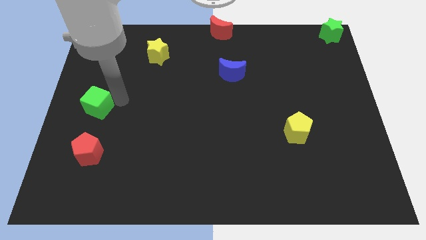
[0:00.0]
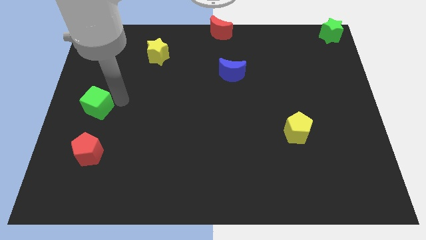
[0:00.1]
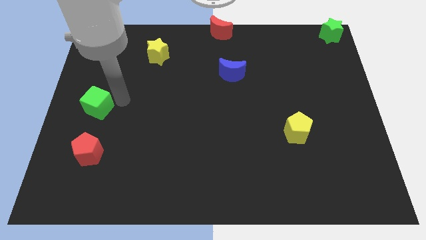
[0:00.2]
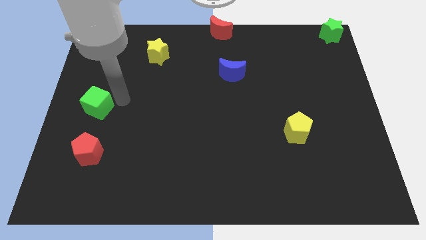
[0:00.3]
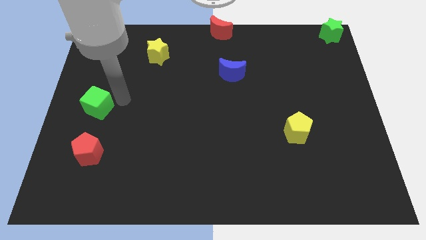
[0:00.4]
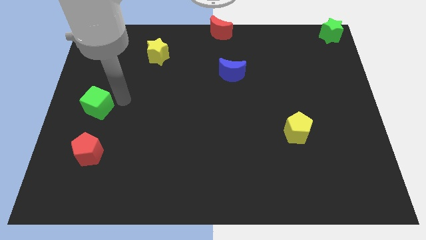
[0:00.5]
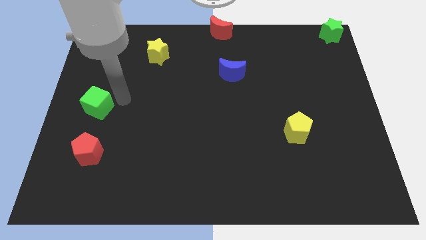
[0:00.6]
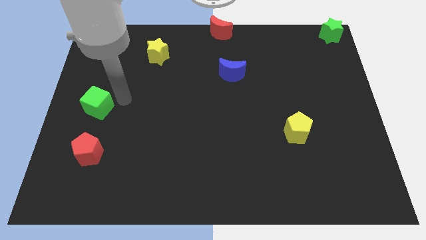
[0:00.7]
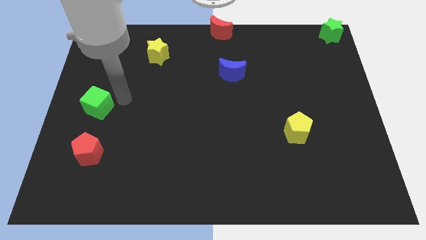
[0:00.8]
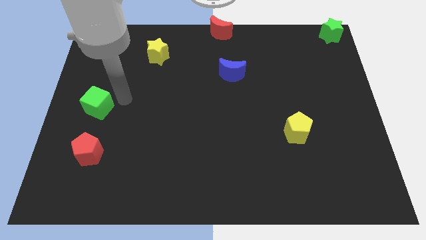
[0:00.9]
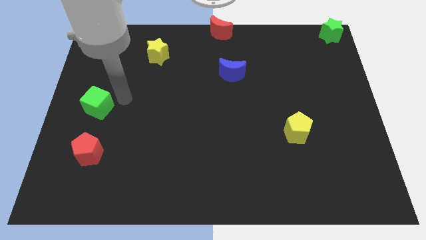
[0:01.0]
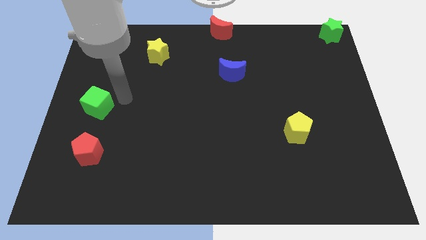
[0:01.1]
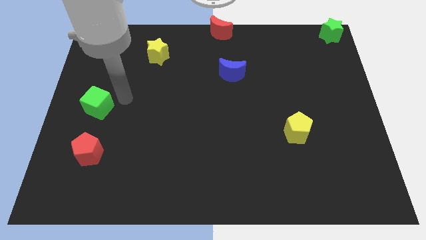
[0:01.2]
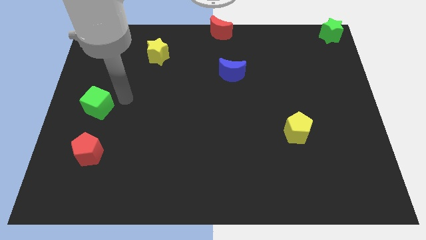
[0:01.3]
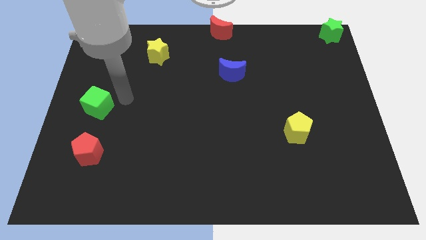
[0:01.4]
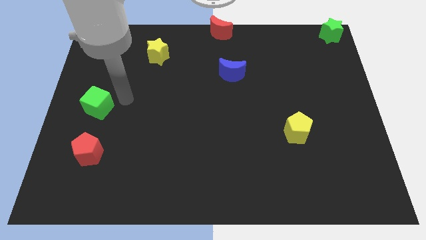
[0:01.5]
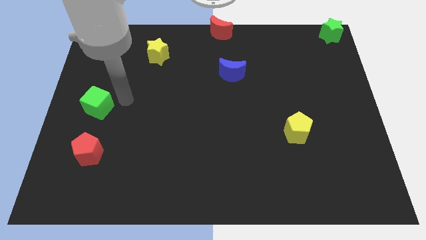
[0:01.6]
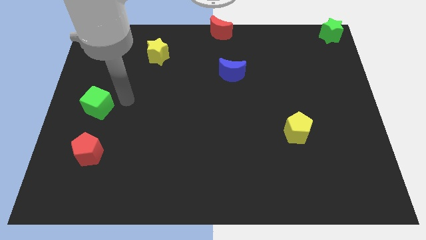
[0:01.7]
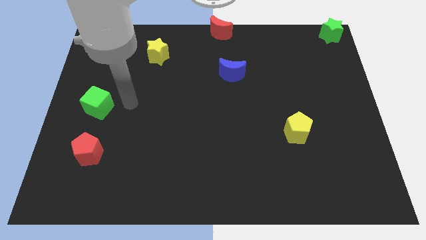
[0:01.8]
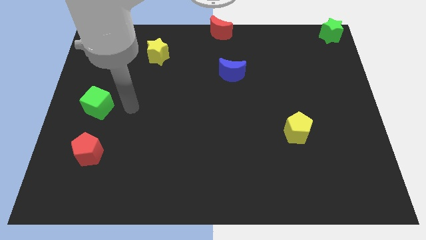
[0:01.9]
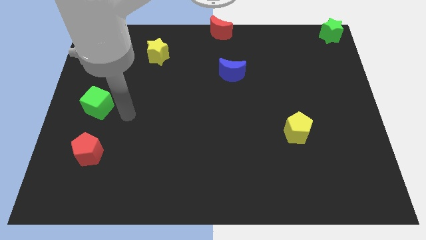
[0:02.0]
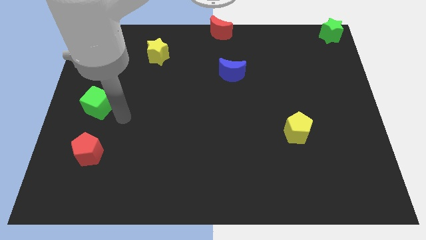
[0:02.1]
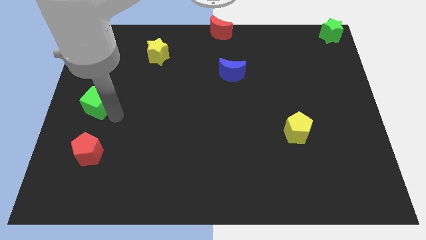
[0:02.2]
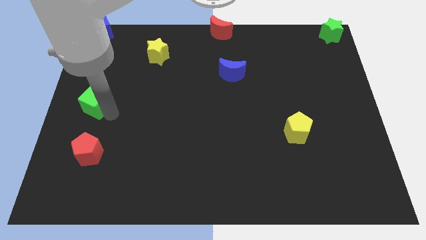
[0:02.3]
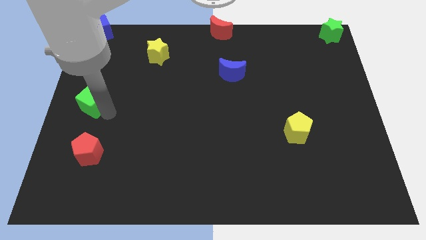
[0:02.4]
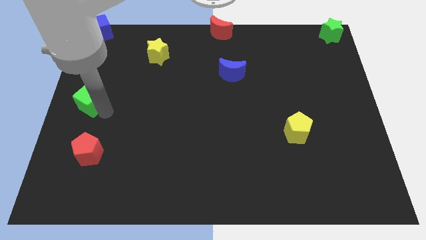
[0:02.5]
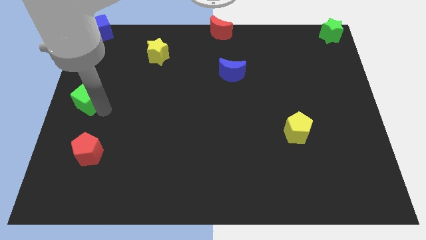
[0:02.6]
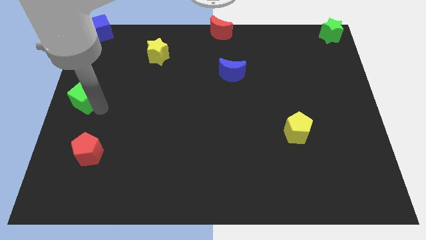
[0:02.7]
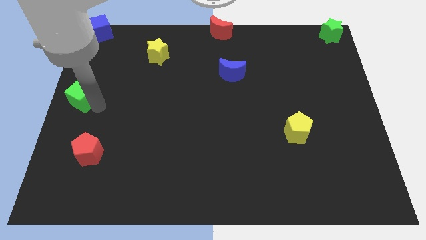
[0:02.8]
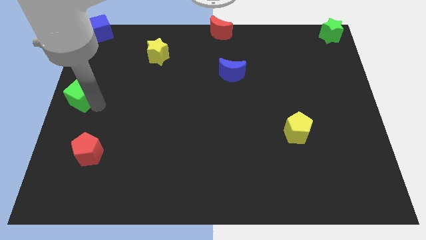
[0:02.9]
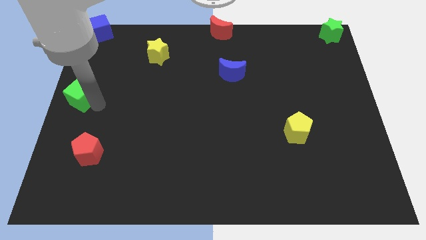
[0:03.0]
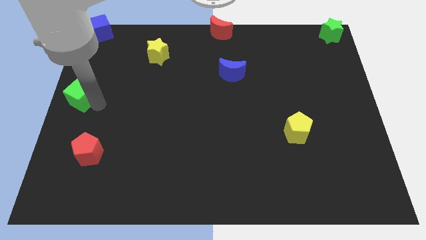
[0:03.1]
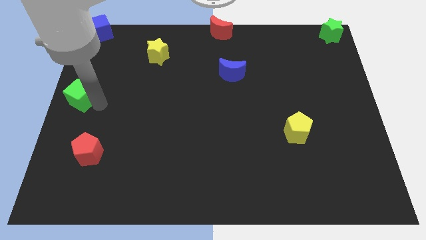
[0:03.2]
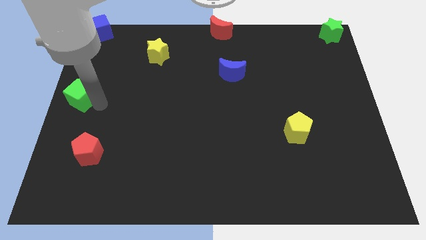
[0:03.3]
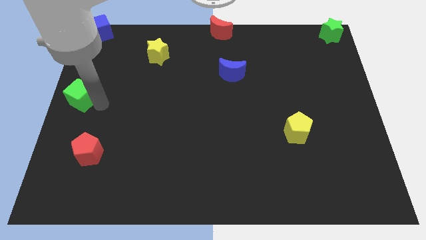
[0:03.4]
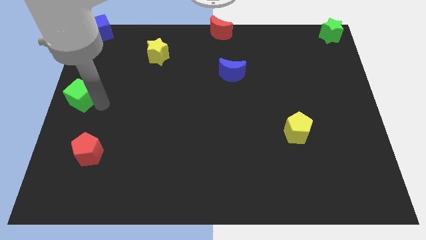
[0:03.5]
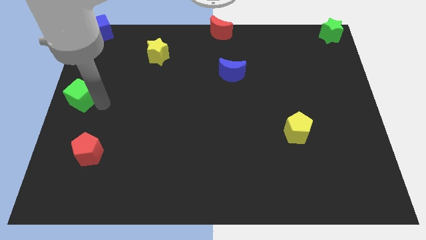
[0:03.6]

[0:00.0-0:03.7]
place the green cube at the left center of the board

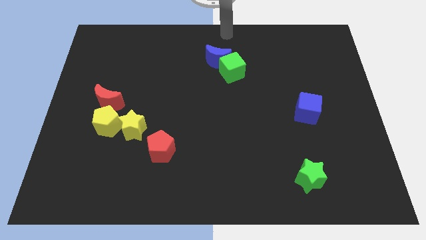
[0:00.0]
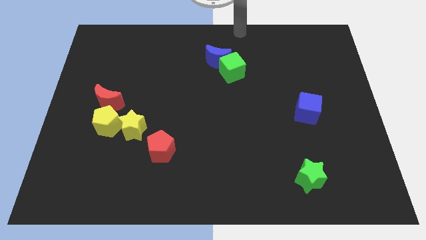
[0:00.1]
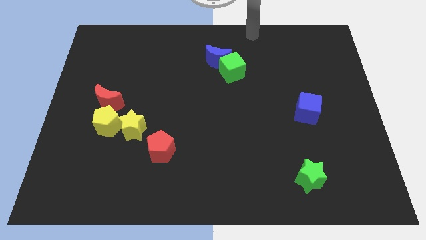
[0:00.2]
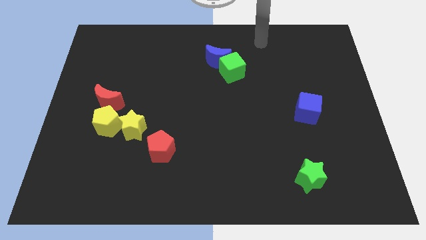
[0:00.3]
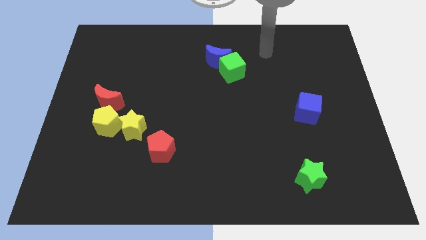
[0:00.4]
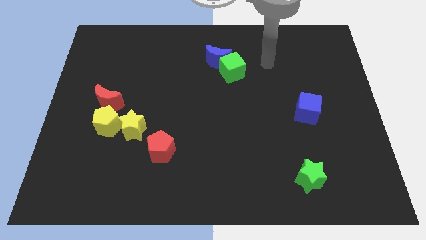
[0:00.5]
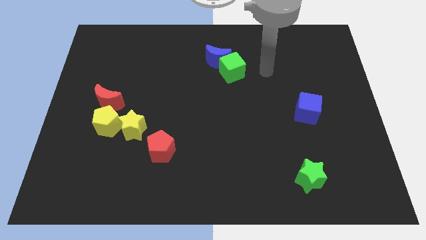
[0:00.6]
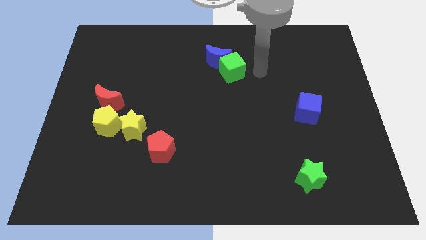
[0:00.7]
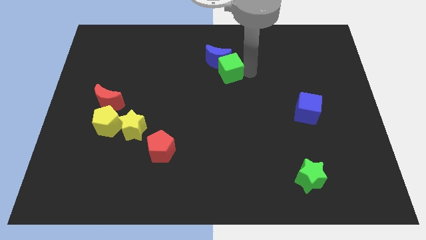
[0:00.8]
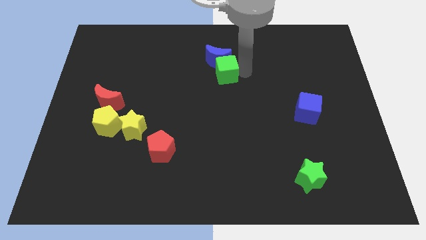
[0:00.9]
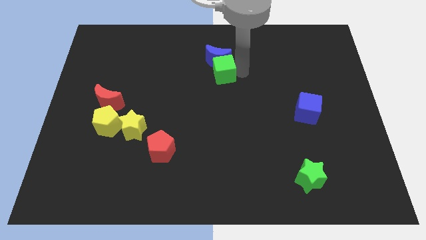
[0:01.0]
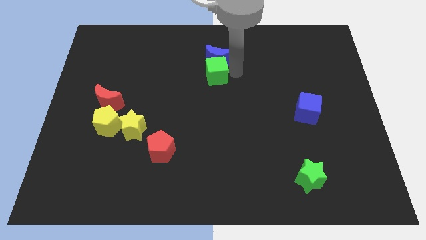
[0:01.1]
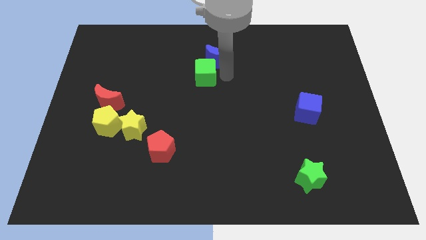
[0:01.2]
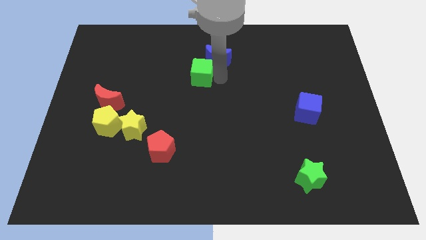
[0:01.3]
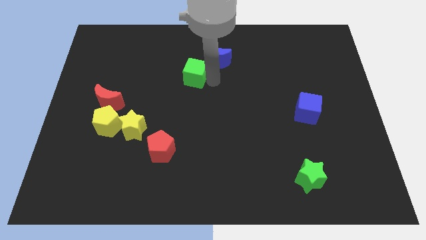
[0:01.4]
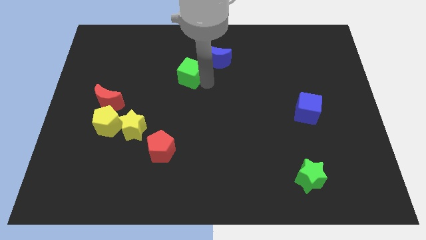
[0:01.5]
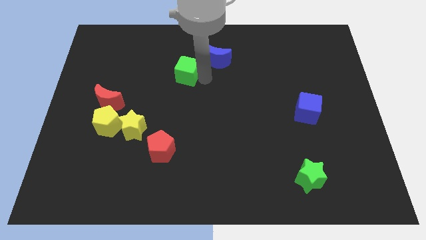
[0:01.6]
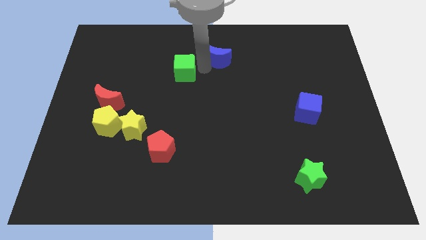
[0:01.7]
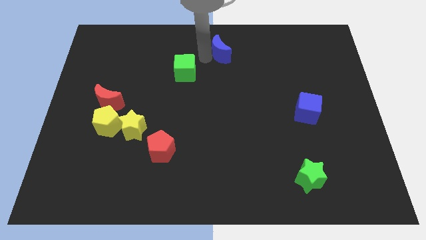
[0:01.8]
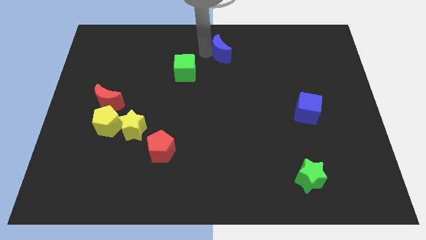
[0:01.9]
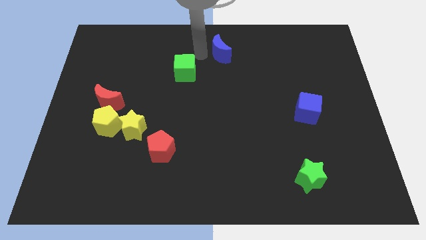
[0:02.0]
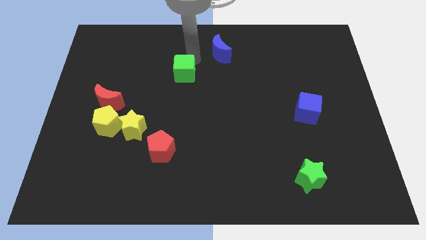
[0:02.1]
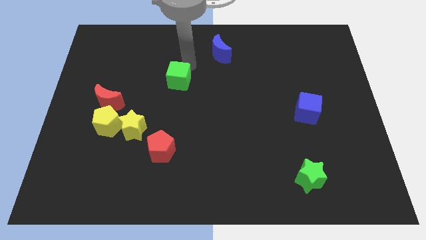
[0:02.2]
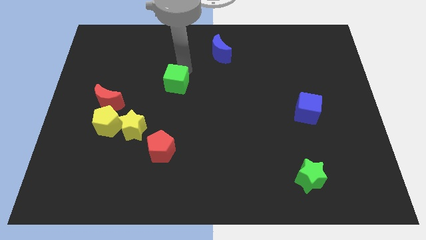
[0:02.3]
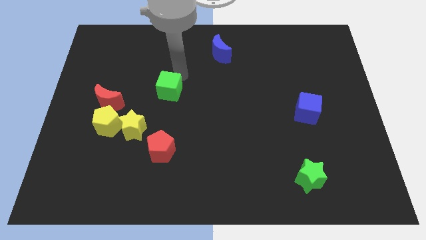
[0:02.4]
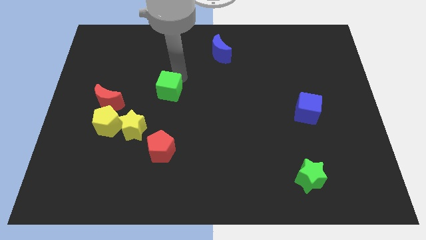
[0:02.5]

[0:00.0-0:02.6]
push the green cube to the bottom left of the blue crescent

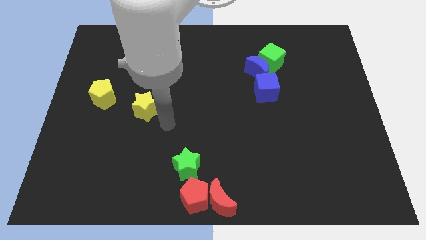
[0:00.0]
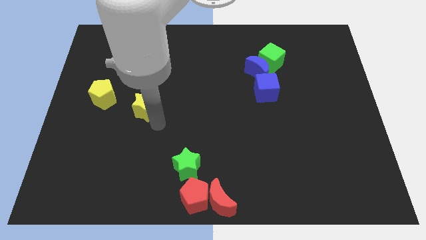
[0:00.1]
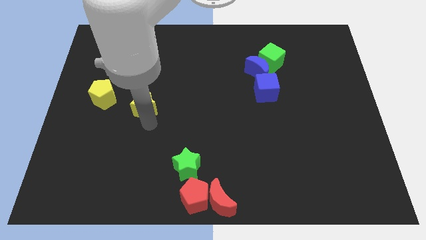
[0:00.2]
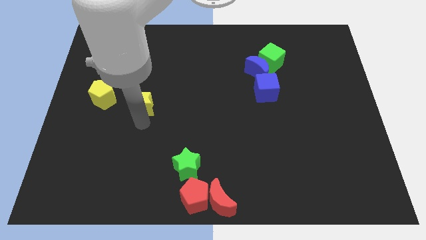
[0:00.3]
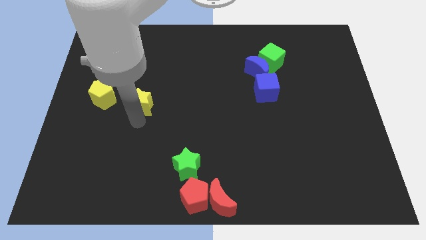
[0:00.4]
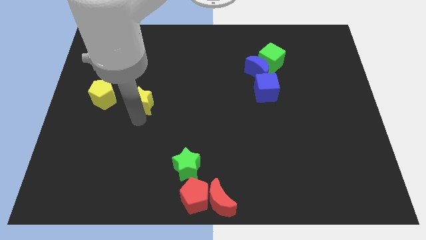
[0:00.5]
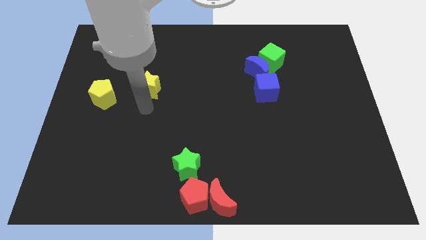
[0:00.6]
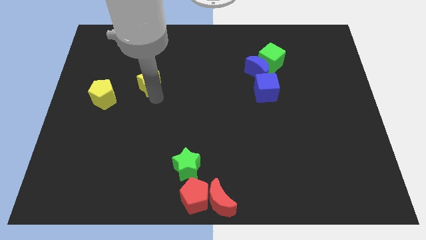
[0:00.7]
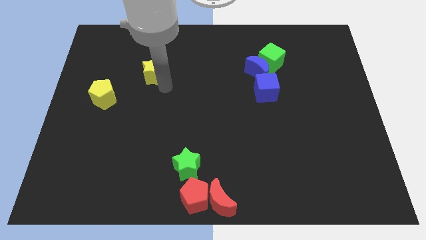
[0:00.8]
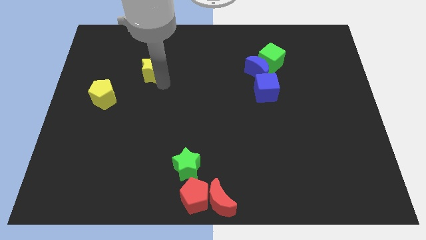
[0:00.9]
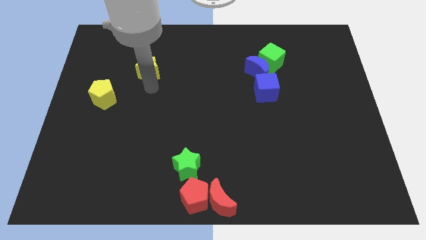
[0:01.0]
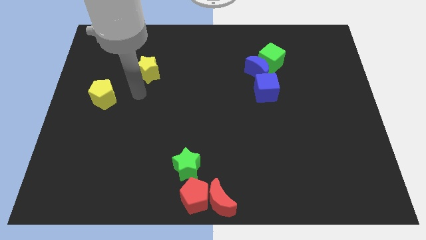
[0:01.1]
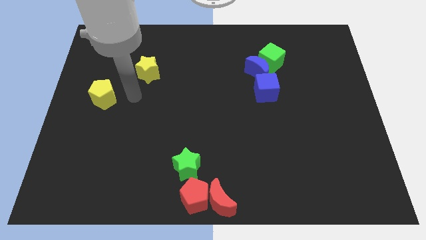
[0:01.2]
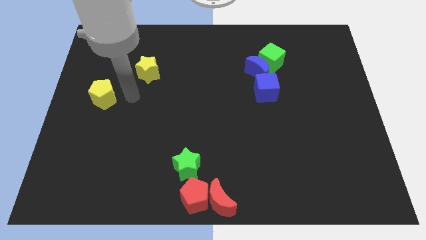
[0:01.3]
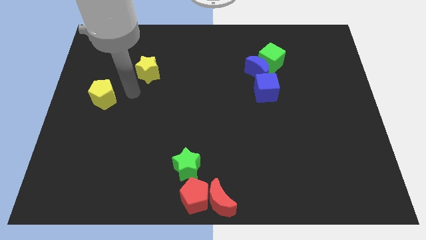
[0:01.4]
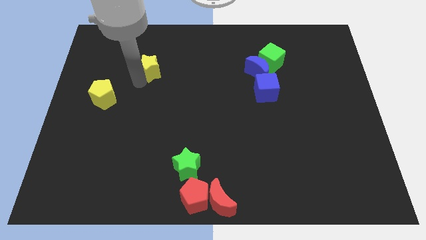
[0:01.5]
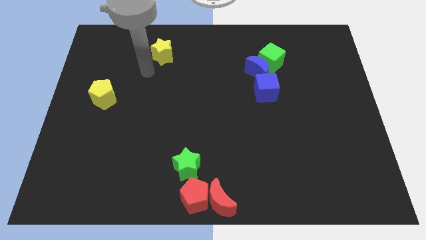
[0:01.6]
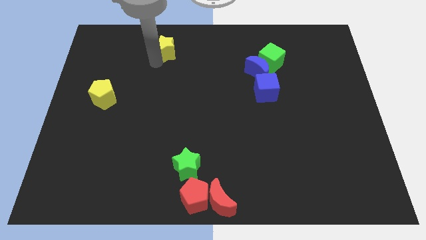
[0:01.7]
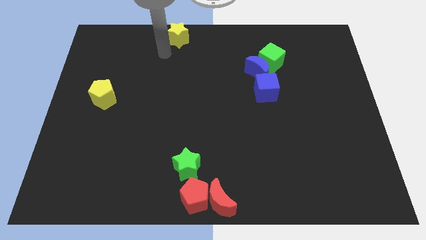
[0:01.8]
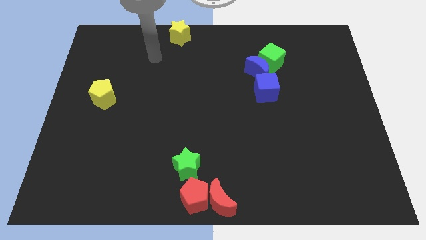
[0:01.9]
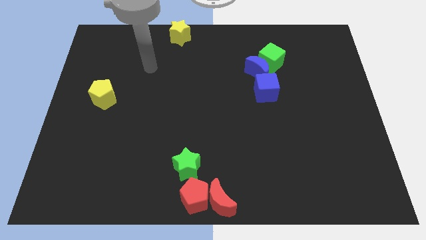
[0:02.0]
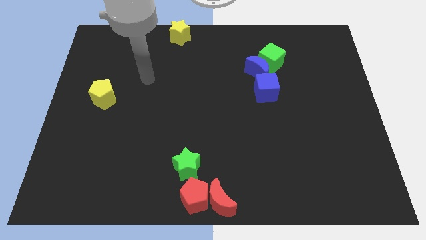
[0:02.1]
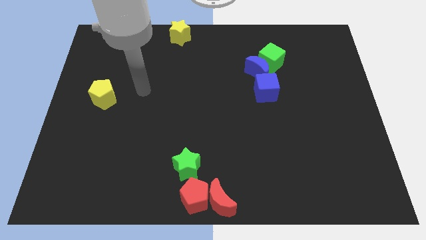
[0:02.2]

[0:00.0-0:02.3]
move the yellow star to the top side of the board

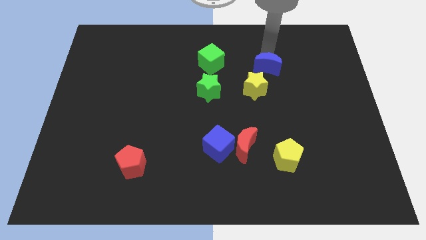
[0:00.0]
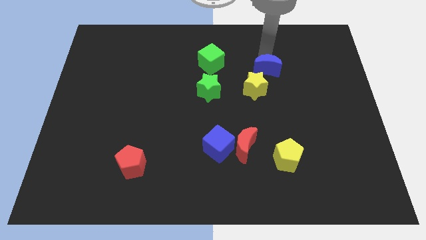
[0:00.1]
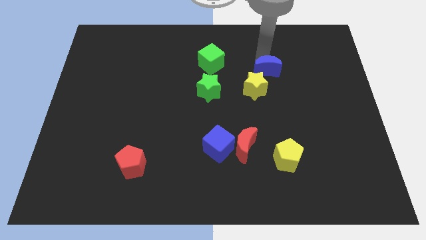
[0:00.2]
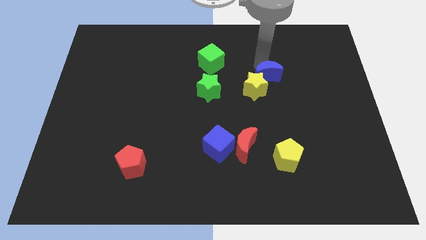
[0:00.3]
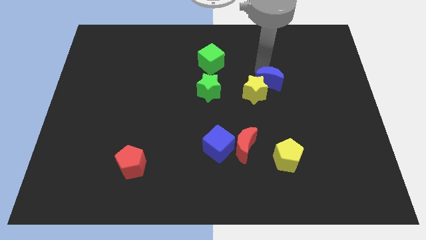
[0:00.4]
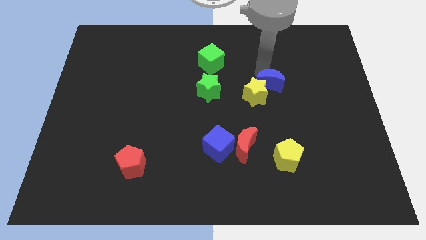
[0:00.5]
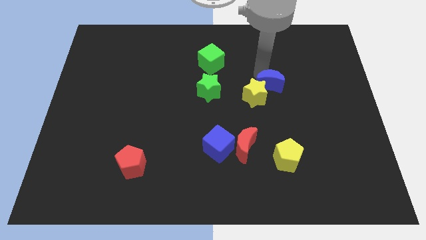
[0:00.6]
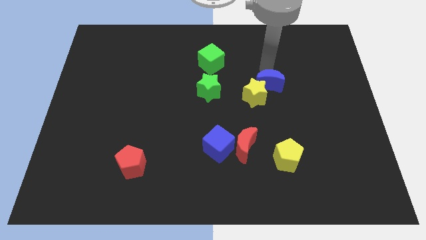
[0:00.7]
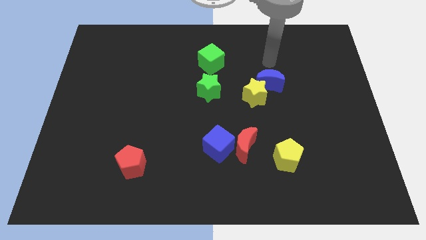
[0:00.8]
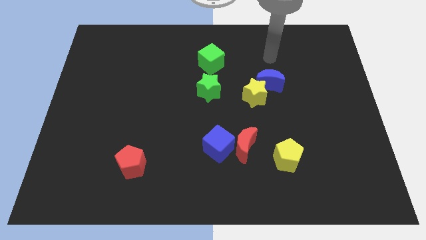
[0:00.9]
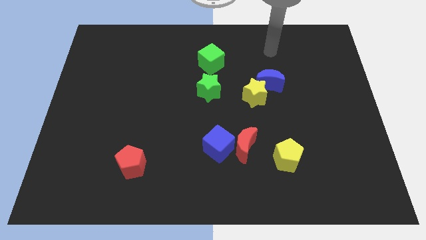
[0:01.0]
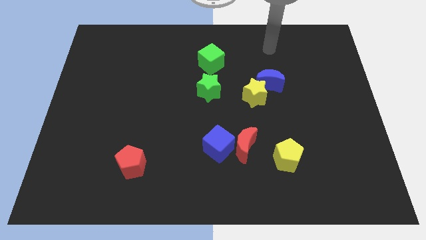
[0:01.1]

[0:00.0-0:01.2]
push blue moon in to yellow star
